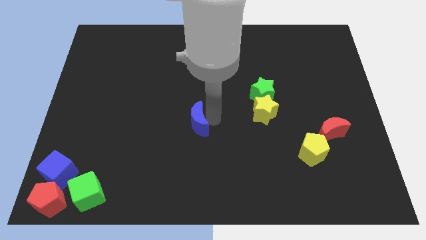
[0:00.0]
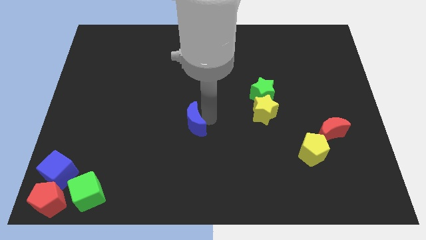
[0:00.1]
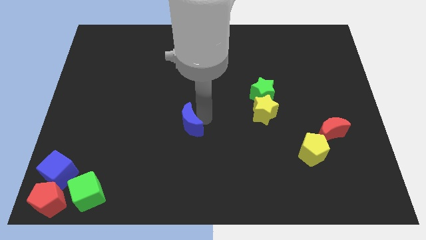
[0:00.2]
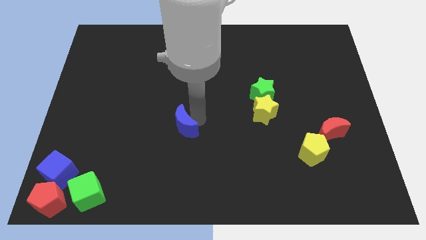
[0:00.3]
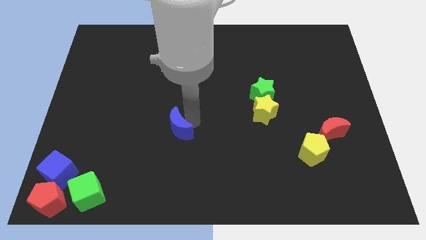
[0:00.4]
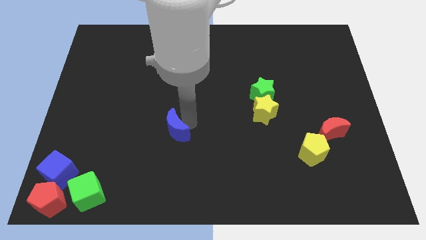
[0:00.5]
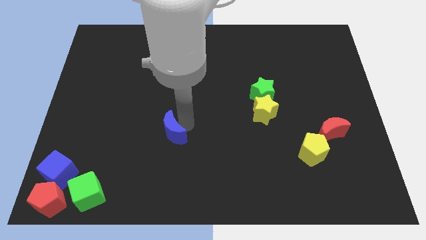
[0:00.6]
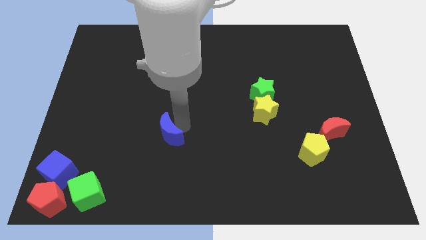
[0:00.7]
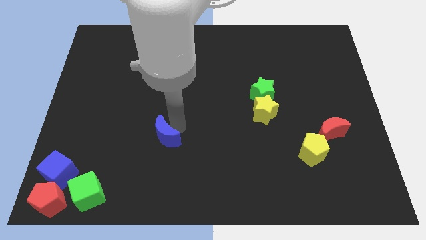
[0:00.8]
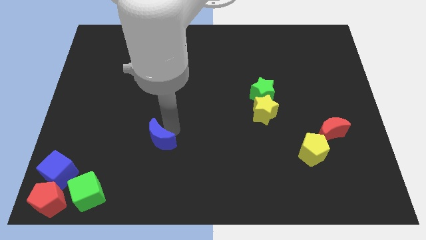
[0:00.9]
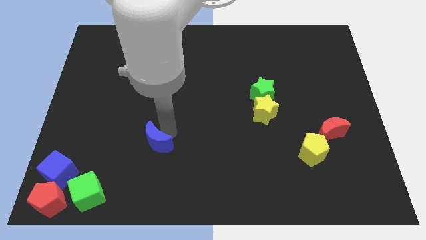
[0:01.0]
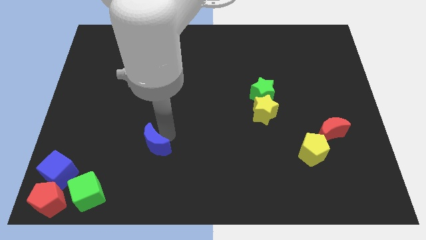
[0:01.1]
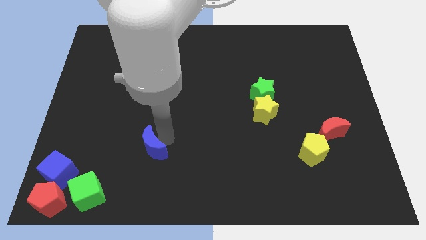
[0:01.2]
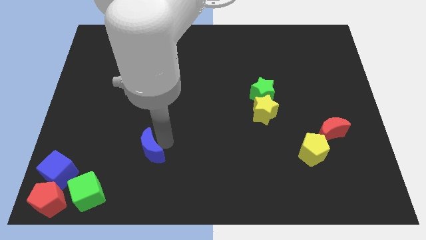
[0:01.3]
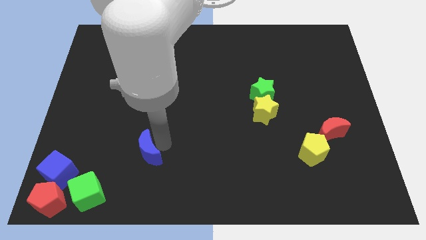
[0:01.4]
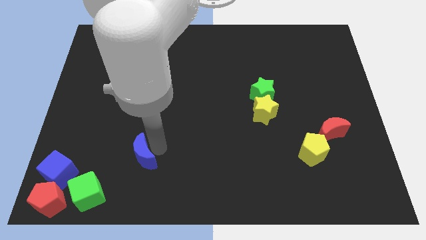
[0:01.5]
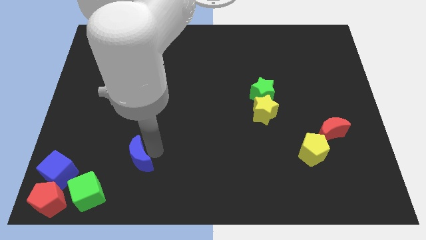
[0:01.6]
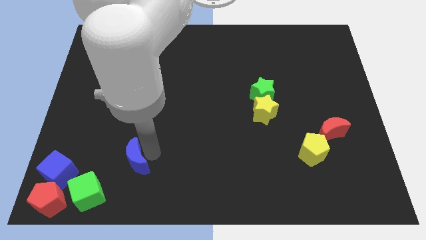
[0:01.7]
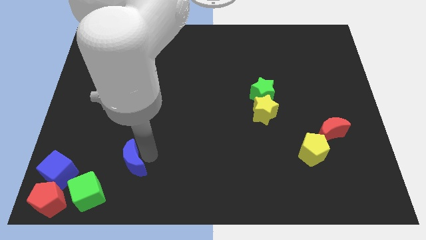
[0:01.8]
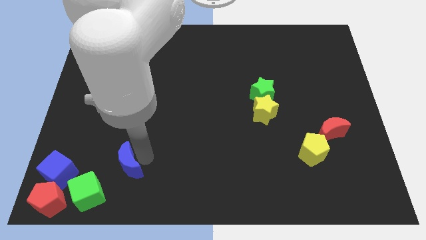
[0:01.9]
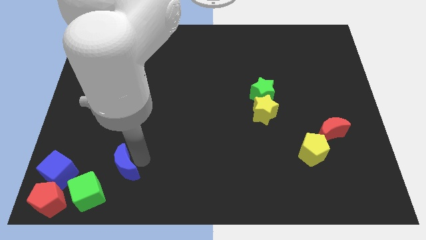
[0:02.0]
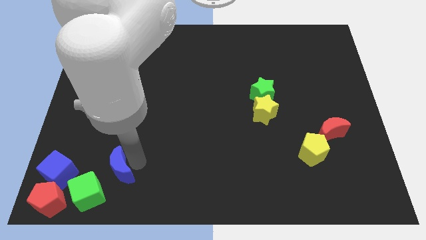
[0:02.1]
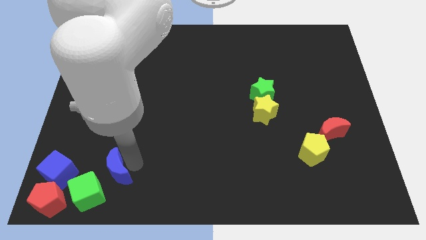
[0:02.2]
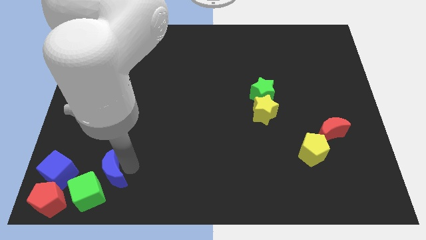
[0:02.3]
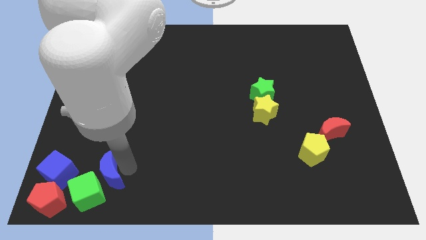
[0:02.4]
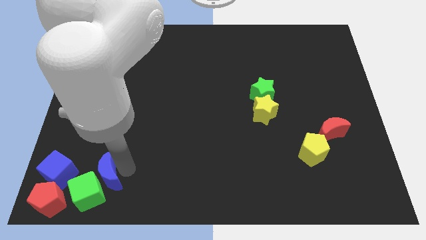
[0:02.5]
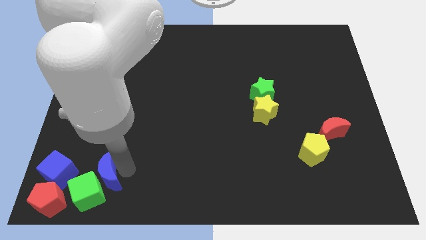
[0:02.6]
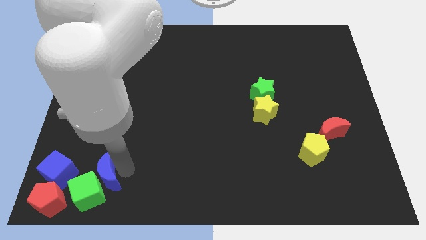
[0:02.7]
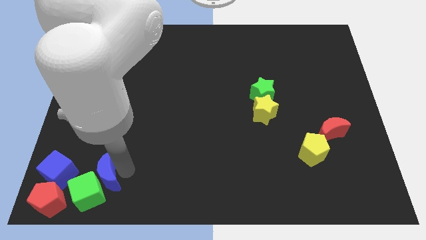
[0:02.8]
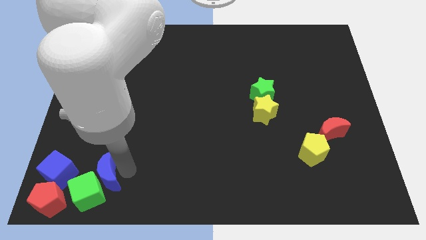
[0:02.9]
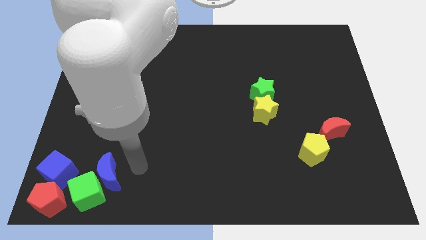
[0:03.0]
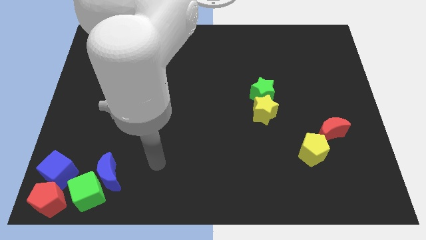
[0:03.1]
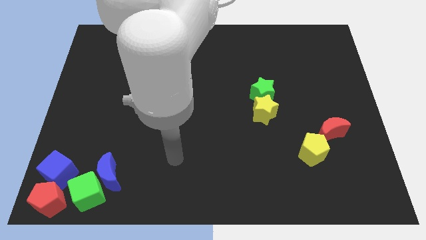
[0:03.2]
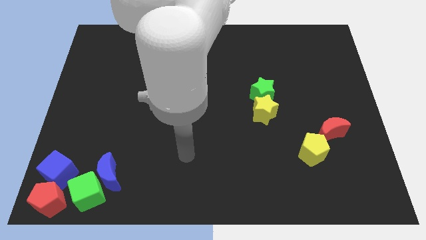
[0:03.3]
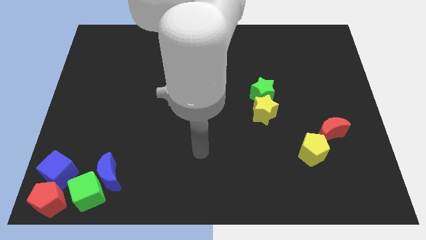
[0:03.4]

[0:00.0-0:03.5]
place the blue crescent at the top right side of the green cube

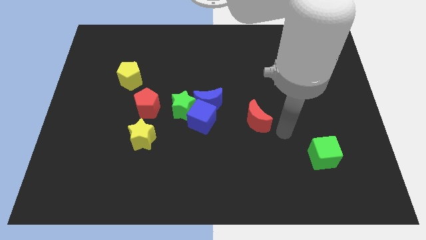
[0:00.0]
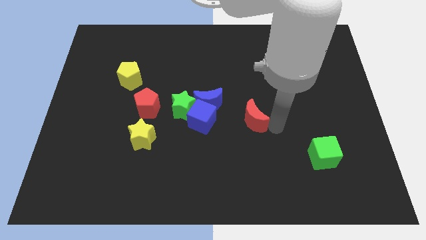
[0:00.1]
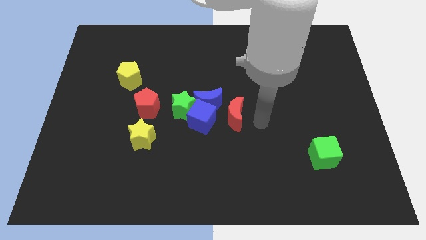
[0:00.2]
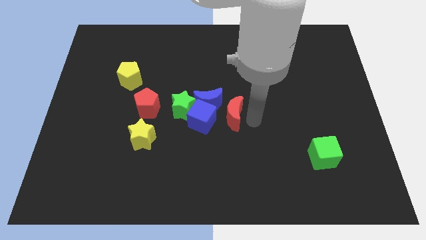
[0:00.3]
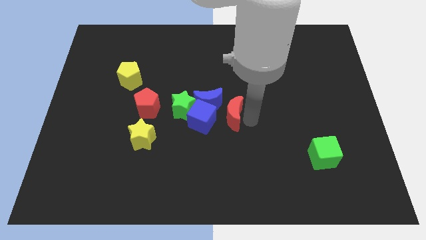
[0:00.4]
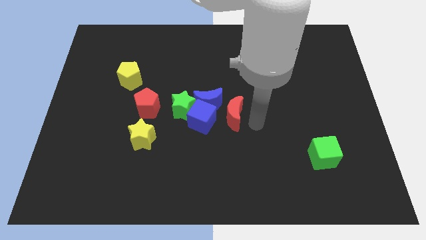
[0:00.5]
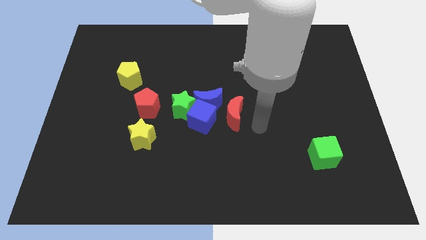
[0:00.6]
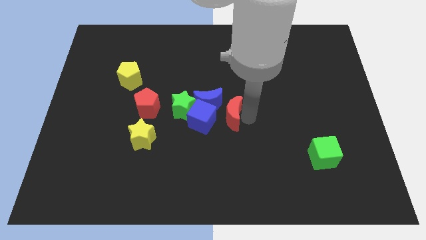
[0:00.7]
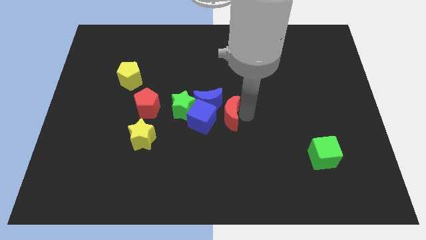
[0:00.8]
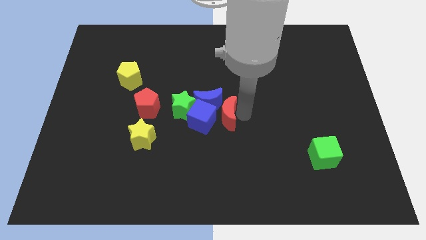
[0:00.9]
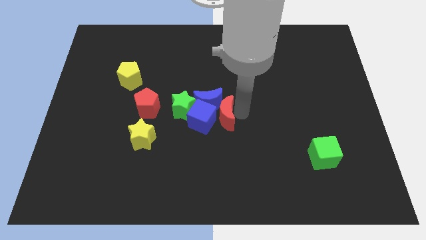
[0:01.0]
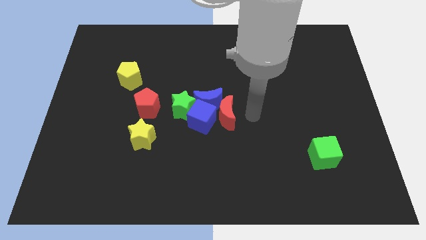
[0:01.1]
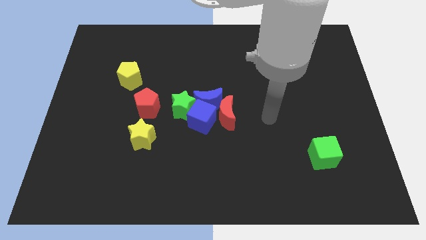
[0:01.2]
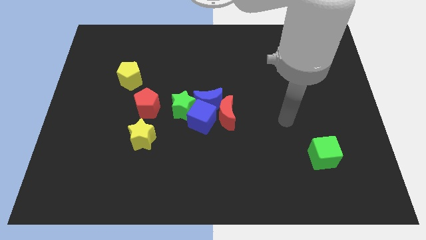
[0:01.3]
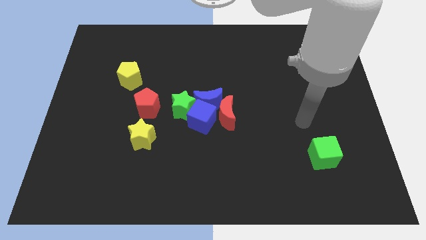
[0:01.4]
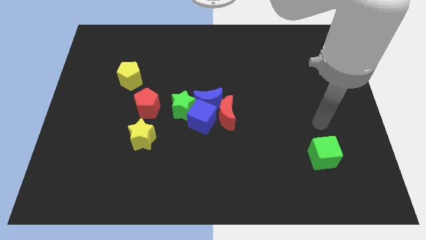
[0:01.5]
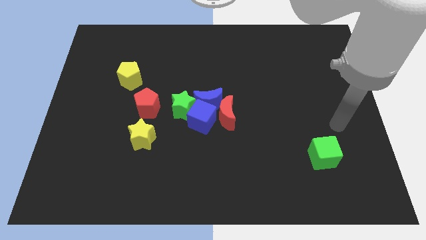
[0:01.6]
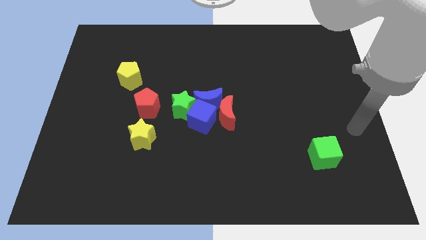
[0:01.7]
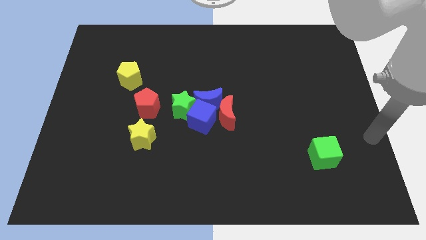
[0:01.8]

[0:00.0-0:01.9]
push red crescent to the right of blue cube

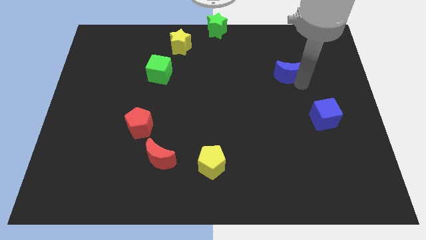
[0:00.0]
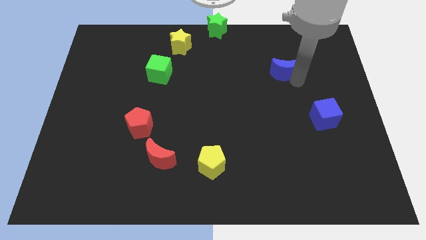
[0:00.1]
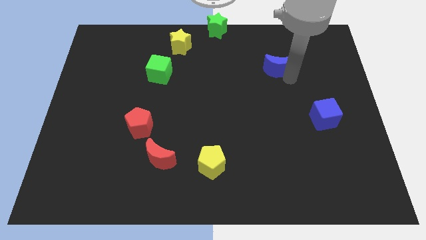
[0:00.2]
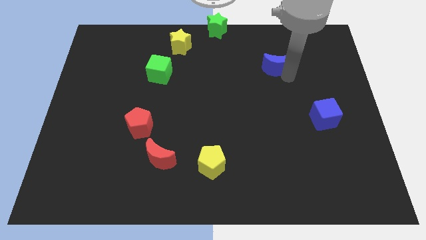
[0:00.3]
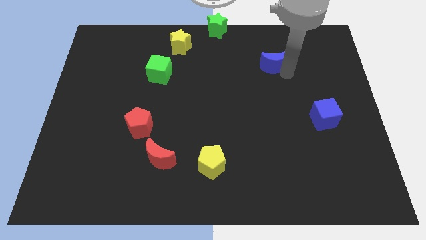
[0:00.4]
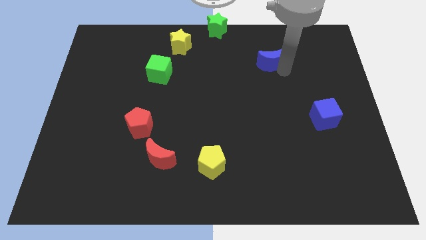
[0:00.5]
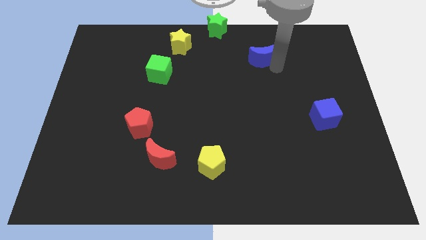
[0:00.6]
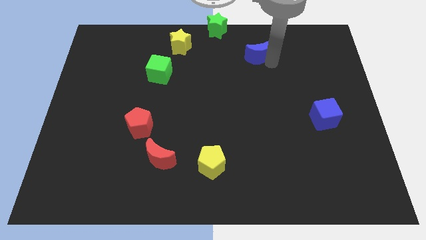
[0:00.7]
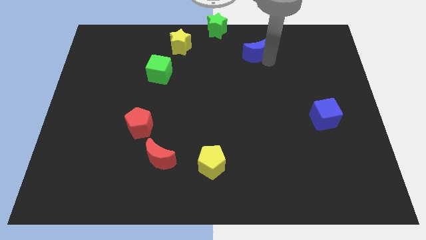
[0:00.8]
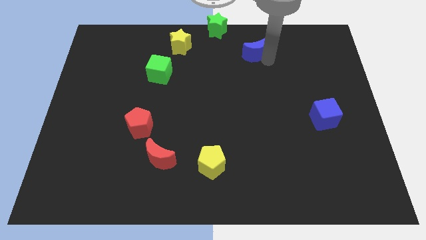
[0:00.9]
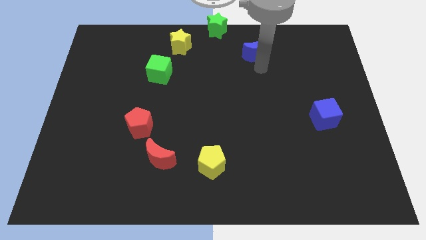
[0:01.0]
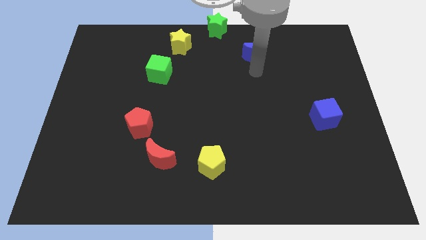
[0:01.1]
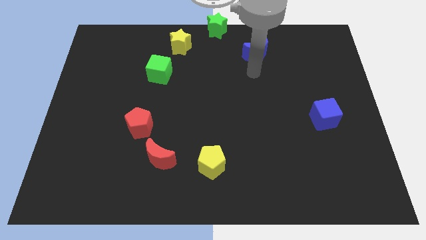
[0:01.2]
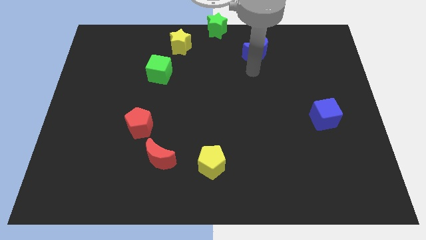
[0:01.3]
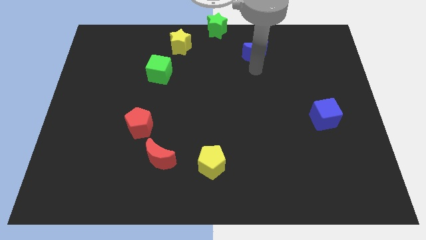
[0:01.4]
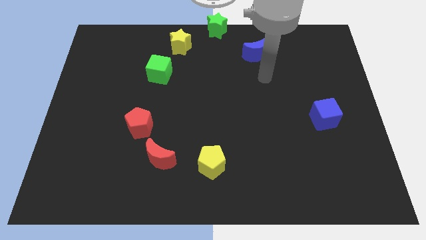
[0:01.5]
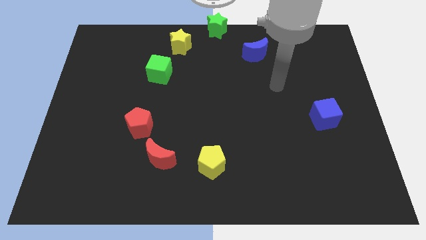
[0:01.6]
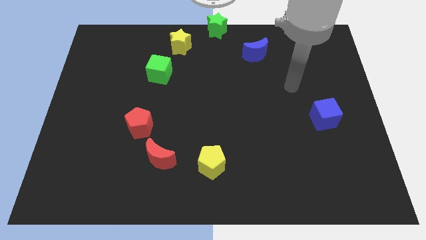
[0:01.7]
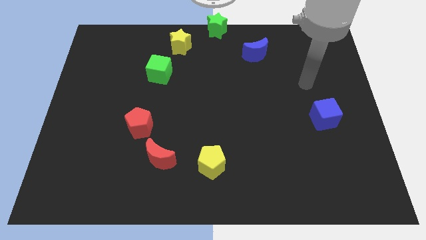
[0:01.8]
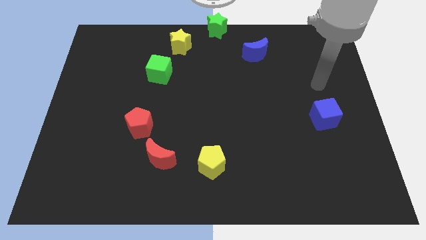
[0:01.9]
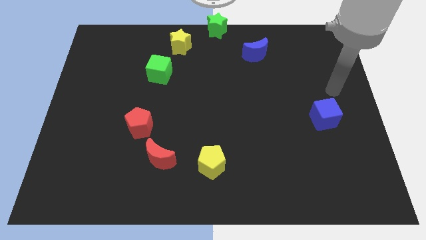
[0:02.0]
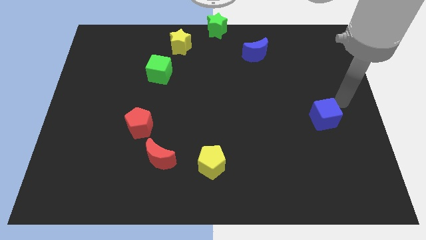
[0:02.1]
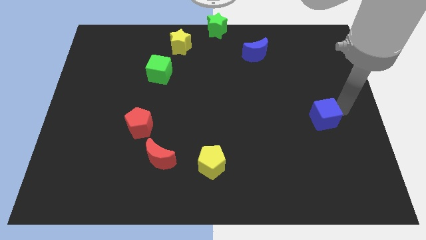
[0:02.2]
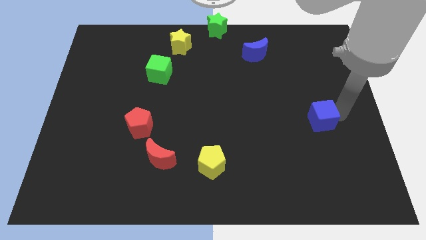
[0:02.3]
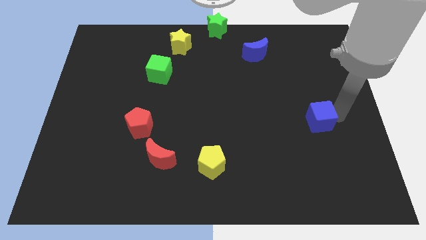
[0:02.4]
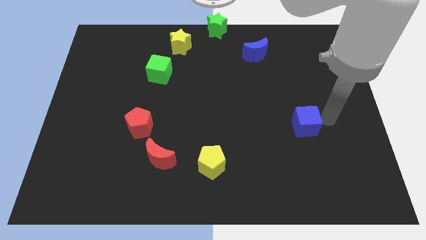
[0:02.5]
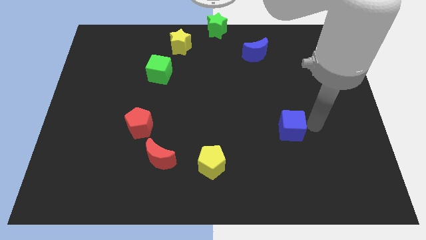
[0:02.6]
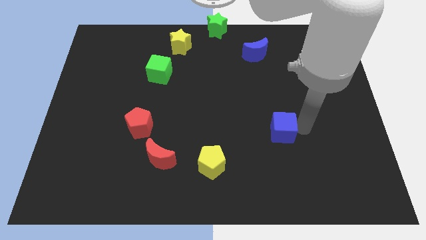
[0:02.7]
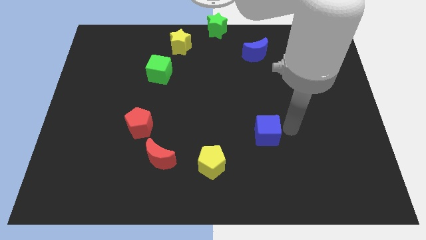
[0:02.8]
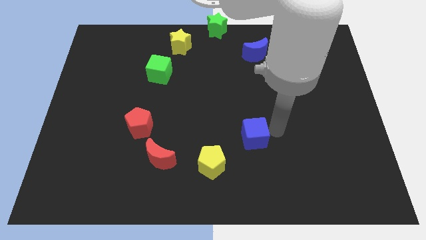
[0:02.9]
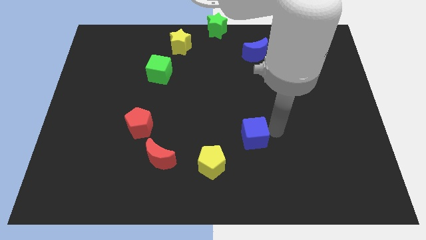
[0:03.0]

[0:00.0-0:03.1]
move the blue moon parallel to yellow star

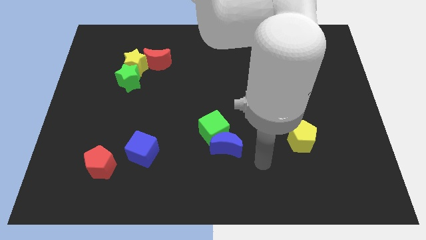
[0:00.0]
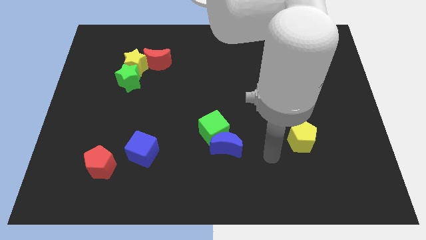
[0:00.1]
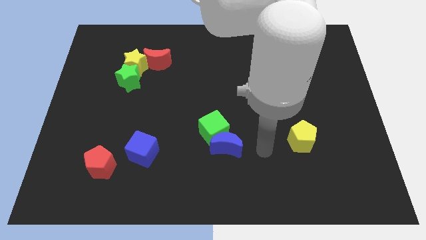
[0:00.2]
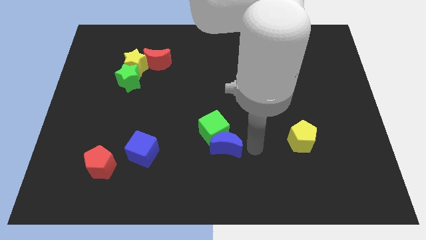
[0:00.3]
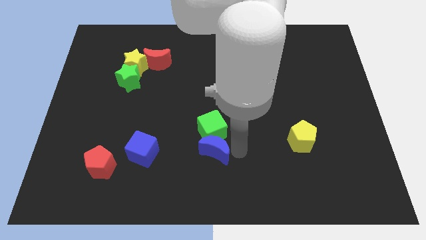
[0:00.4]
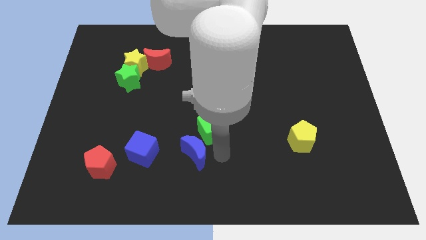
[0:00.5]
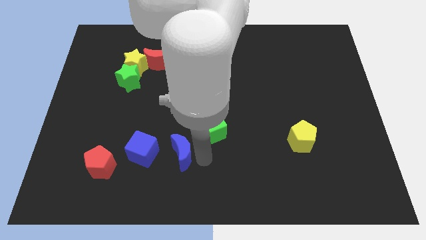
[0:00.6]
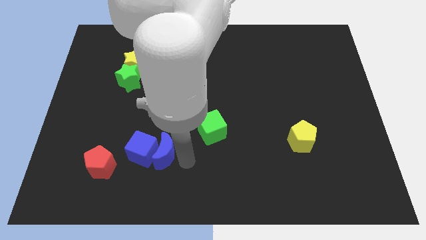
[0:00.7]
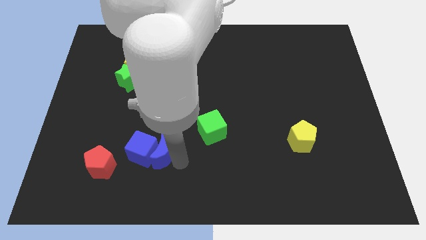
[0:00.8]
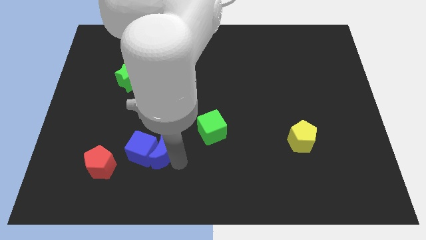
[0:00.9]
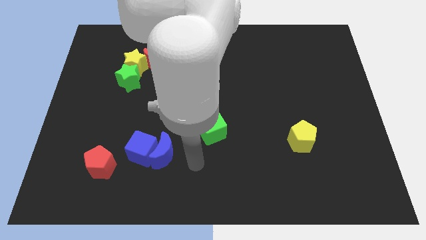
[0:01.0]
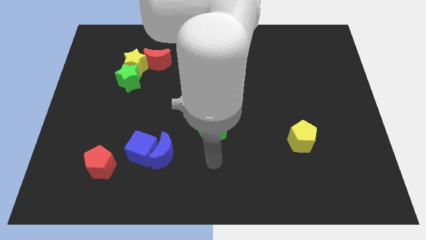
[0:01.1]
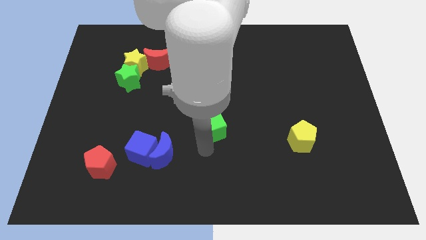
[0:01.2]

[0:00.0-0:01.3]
move the blue moon into the blue cube
